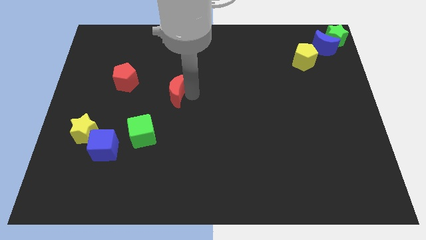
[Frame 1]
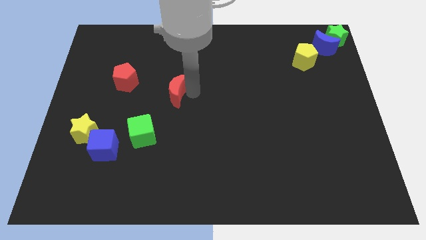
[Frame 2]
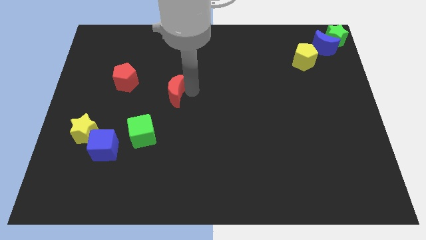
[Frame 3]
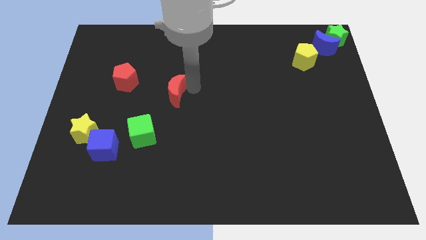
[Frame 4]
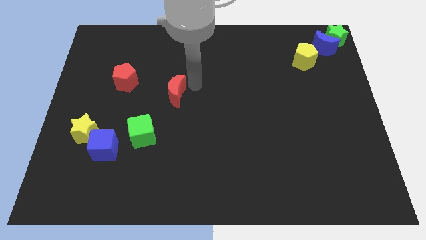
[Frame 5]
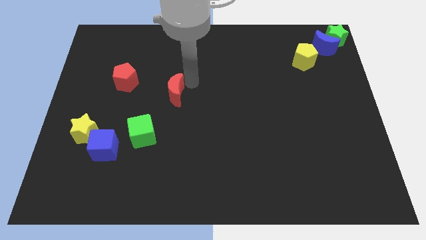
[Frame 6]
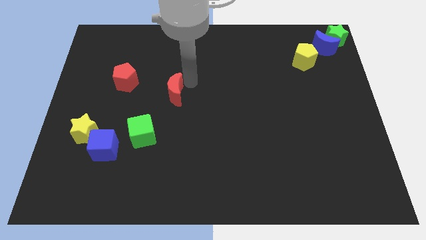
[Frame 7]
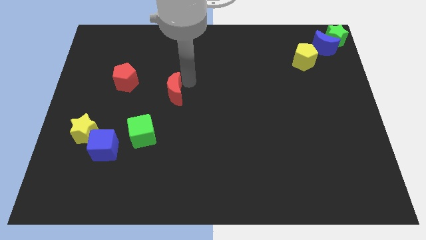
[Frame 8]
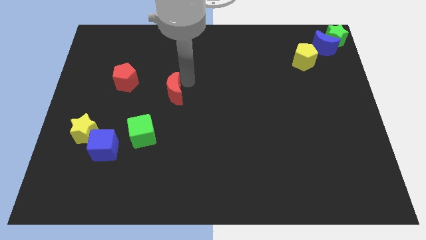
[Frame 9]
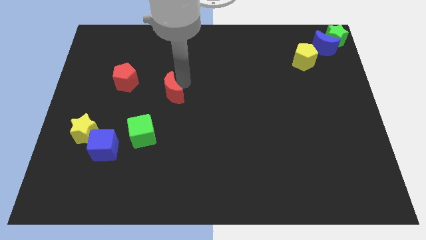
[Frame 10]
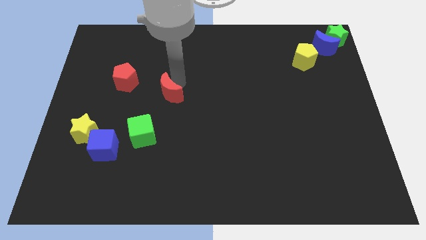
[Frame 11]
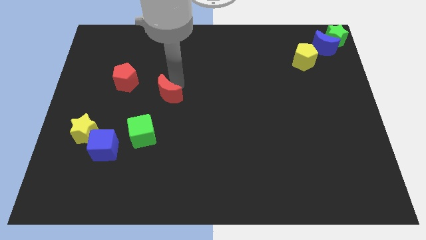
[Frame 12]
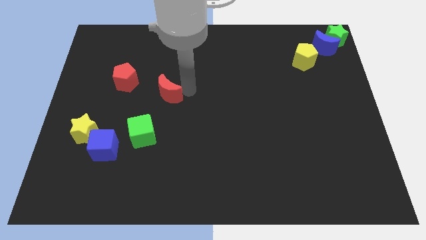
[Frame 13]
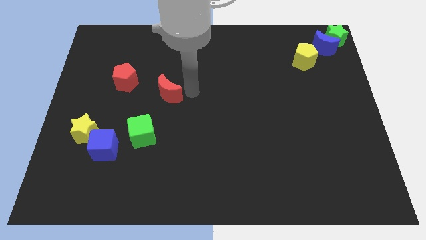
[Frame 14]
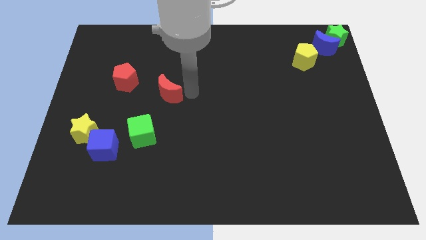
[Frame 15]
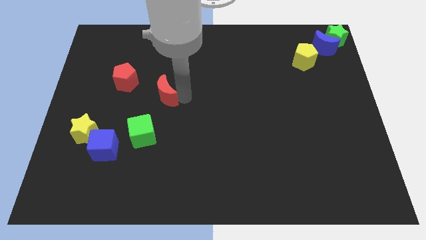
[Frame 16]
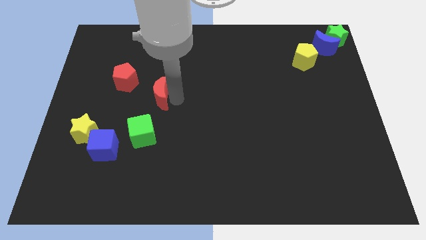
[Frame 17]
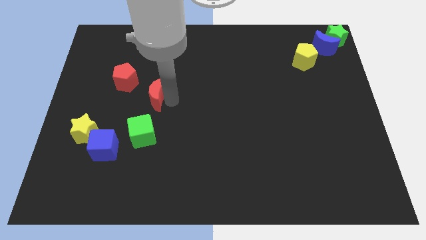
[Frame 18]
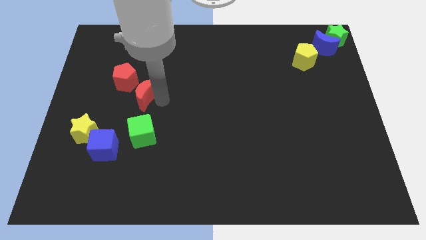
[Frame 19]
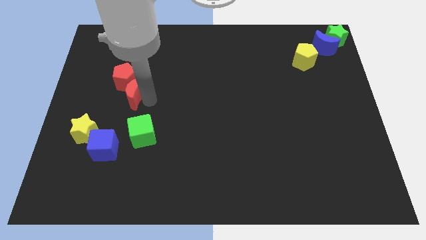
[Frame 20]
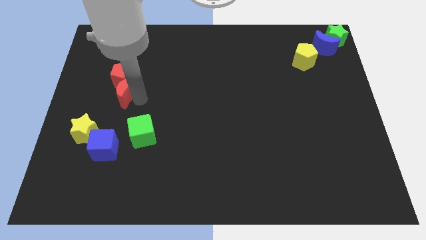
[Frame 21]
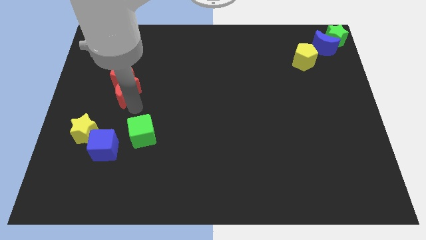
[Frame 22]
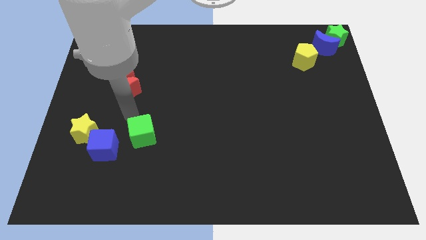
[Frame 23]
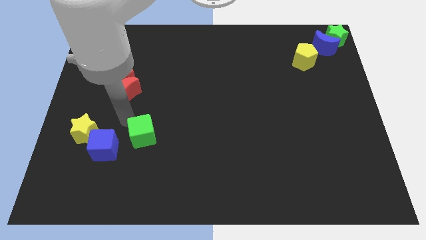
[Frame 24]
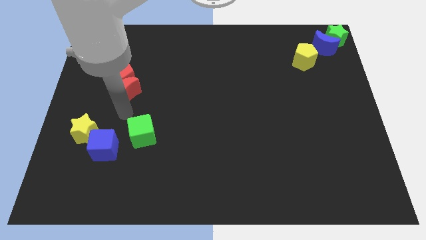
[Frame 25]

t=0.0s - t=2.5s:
place the red moon in between the red pentagon and green cube

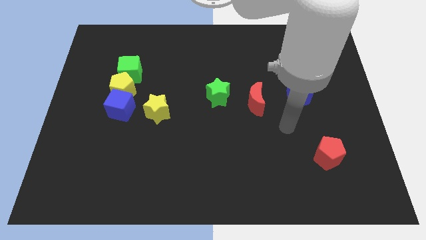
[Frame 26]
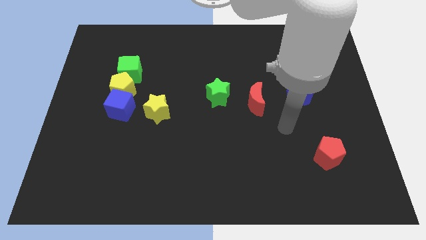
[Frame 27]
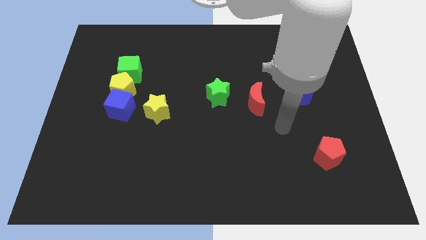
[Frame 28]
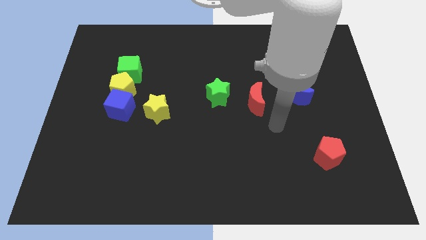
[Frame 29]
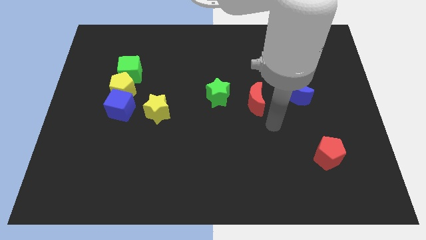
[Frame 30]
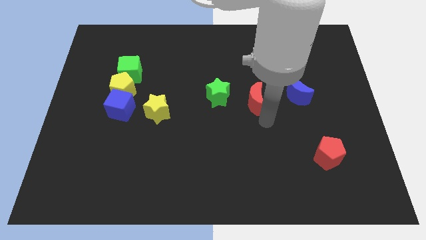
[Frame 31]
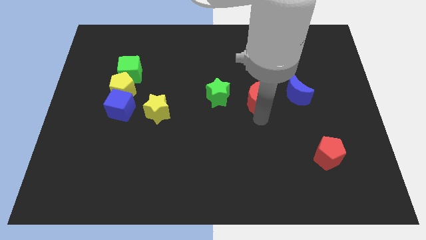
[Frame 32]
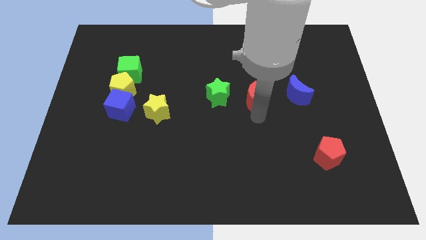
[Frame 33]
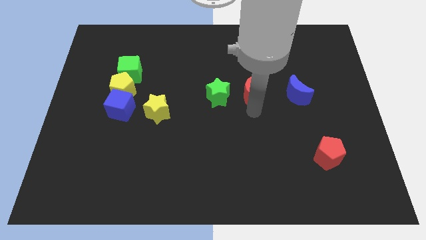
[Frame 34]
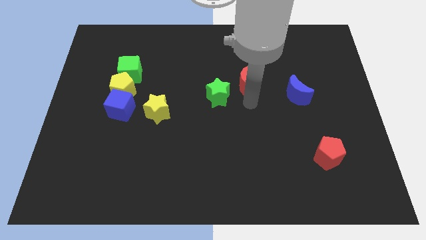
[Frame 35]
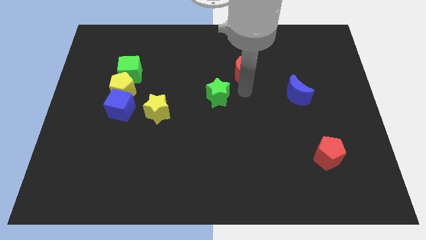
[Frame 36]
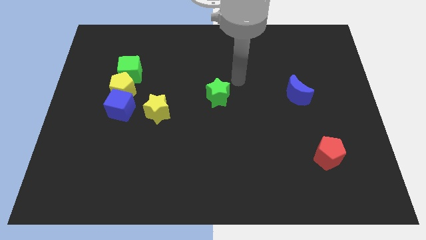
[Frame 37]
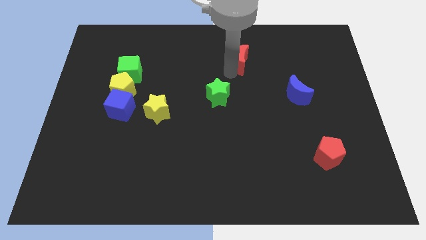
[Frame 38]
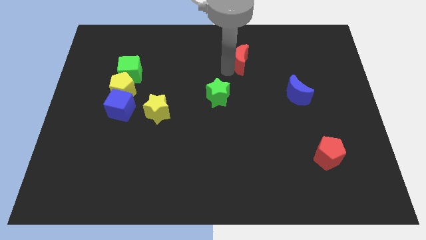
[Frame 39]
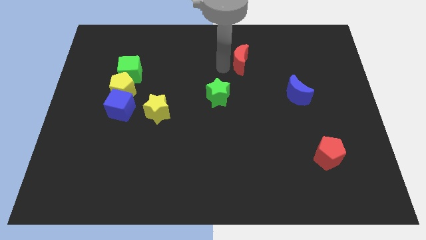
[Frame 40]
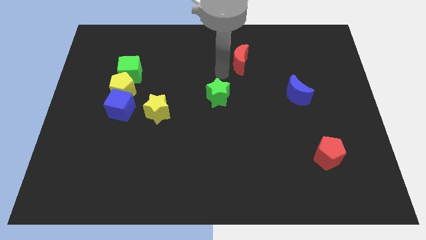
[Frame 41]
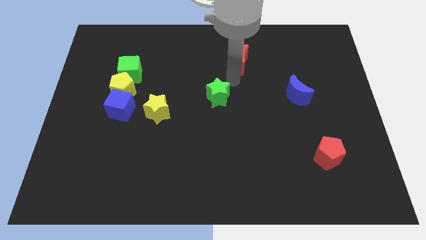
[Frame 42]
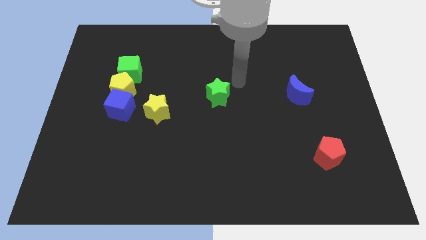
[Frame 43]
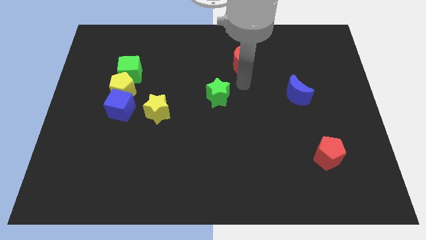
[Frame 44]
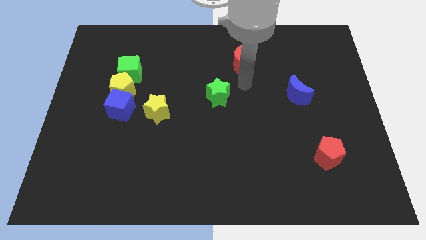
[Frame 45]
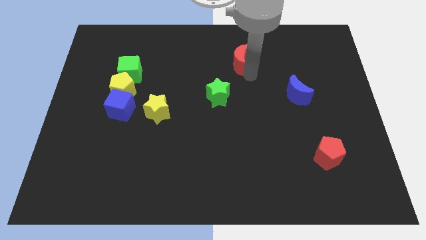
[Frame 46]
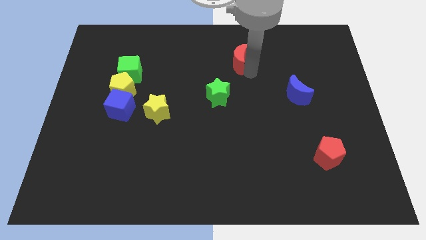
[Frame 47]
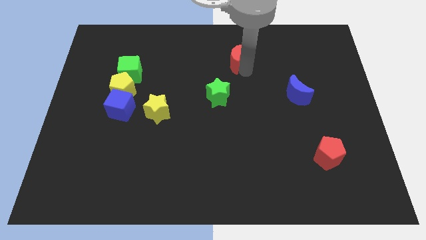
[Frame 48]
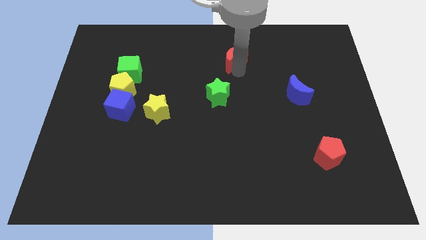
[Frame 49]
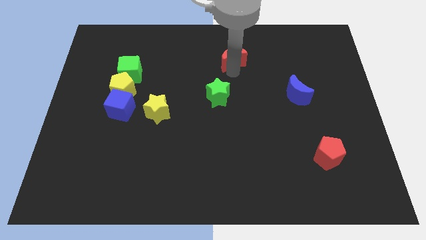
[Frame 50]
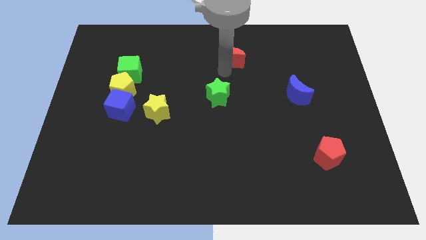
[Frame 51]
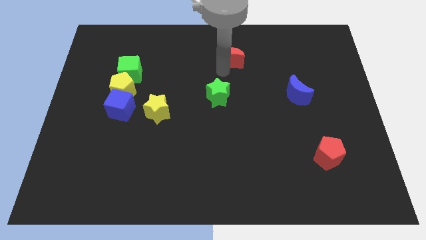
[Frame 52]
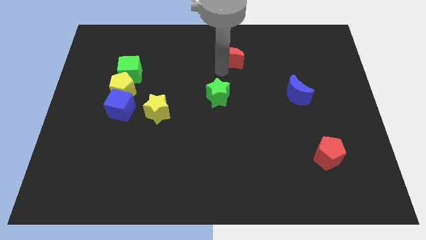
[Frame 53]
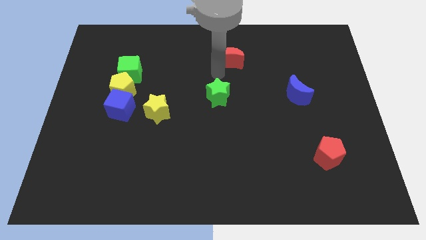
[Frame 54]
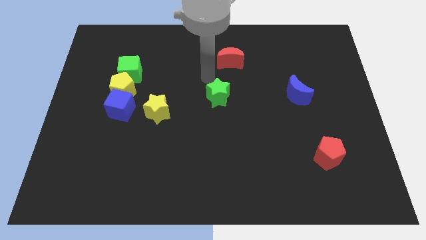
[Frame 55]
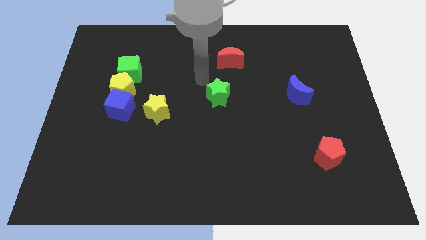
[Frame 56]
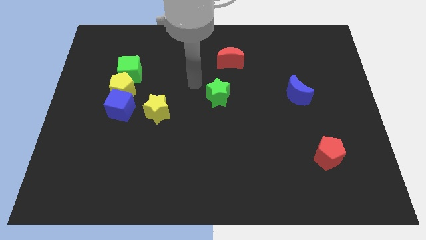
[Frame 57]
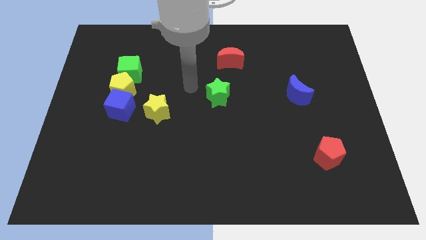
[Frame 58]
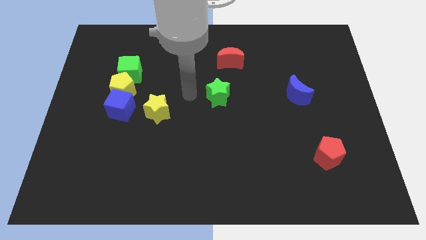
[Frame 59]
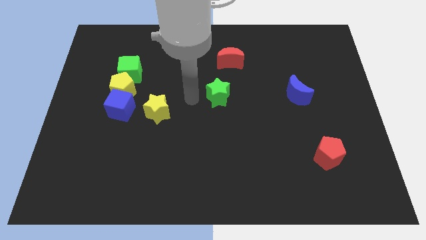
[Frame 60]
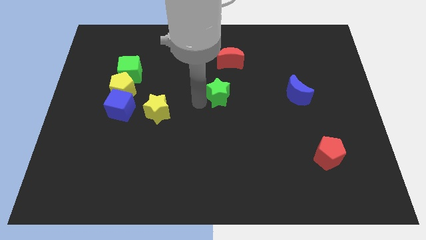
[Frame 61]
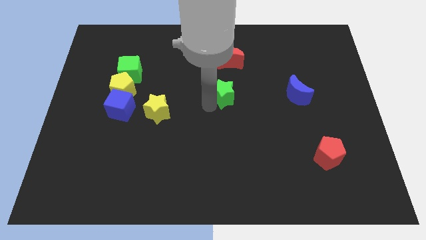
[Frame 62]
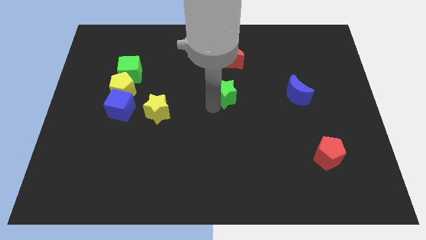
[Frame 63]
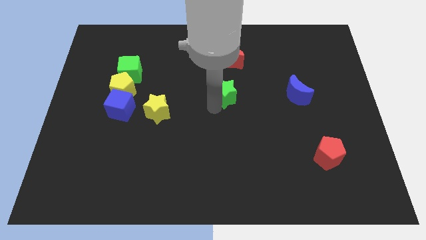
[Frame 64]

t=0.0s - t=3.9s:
place red moon above the green star

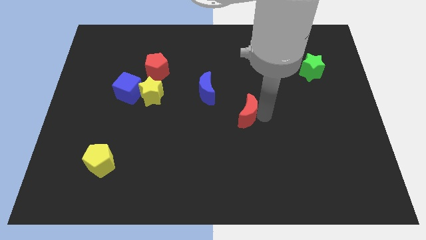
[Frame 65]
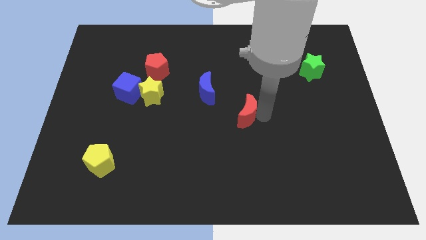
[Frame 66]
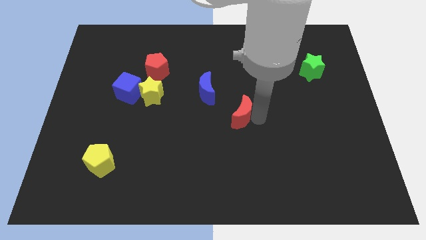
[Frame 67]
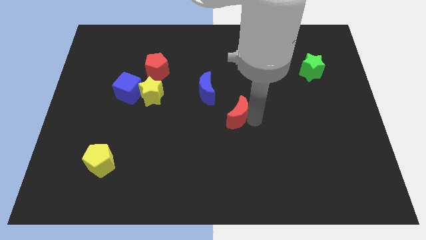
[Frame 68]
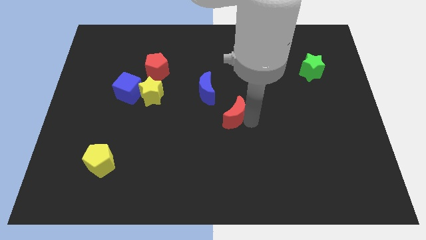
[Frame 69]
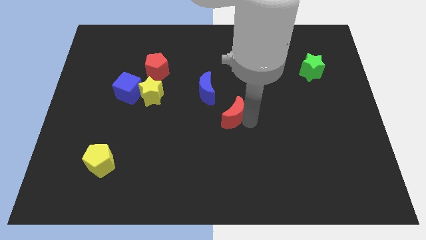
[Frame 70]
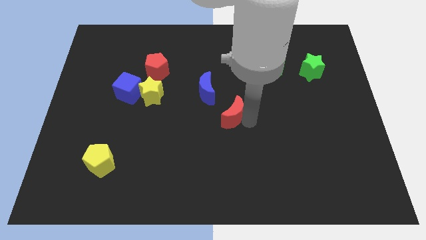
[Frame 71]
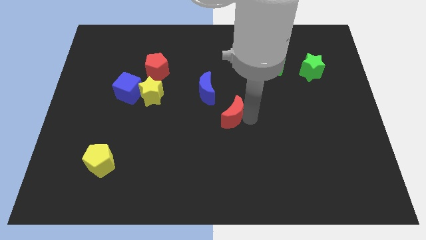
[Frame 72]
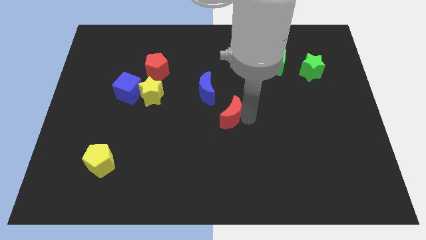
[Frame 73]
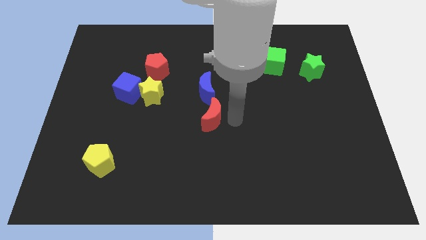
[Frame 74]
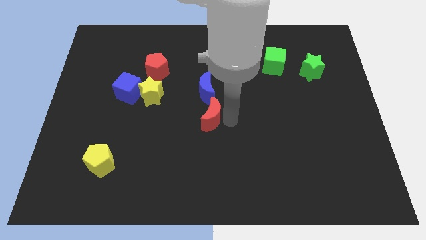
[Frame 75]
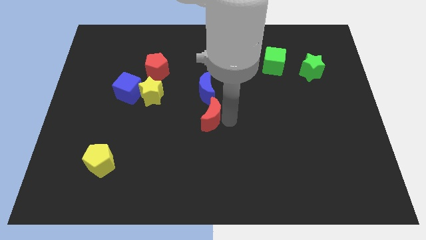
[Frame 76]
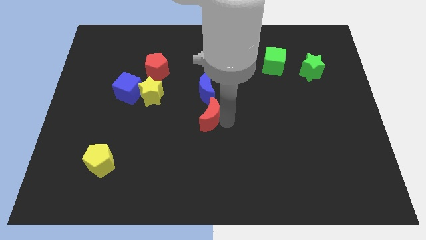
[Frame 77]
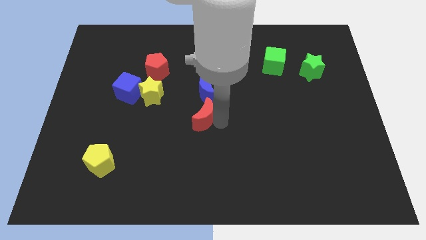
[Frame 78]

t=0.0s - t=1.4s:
place the red moon at the bottom of the blue moon

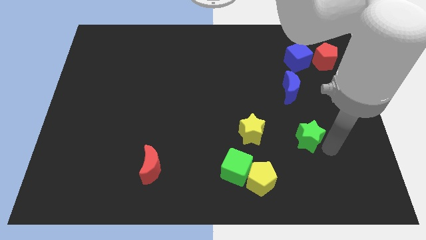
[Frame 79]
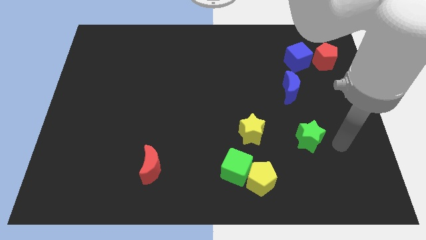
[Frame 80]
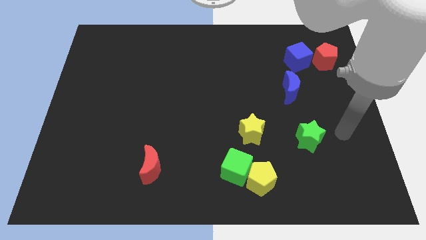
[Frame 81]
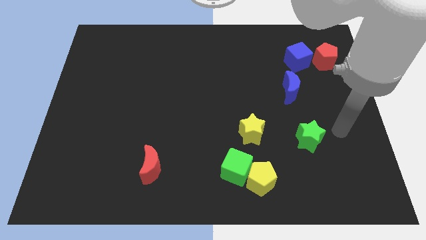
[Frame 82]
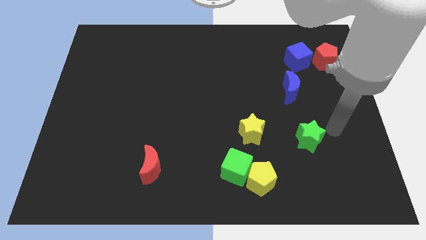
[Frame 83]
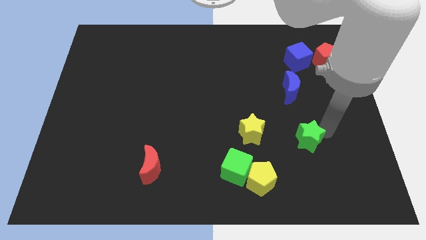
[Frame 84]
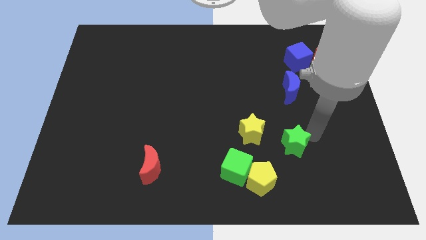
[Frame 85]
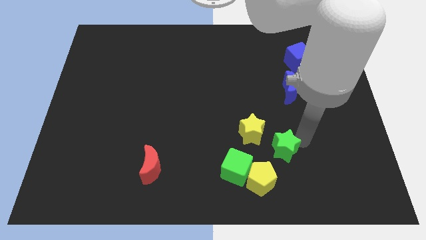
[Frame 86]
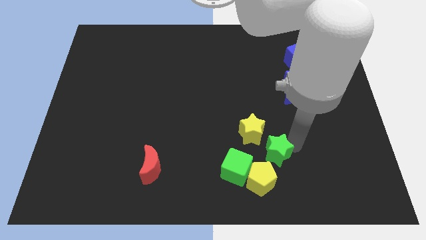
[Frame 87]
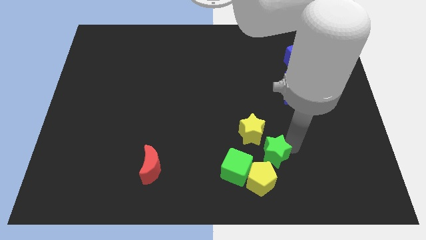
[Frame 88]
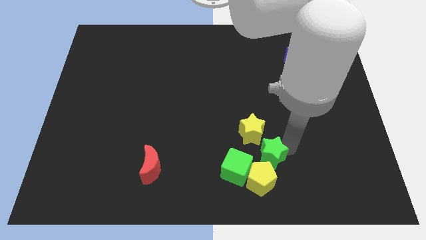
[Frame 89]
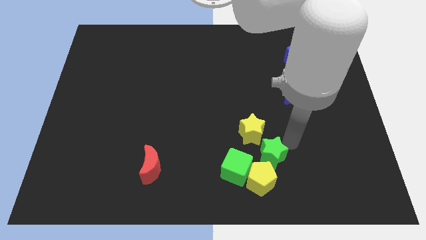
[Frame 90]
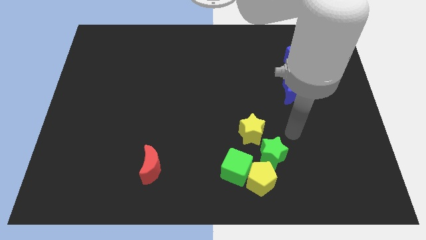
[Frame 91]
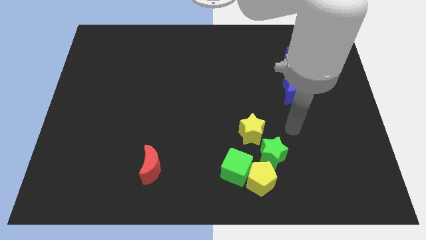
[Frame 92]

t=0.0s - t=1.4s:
slide the green star close to the yellow pentagon
